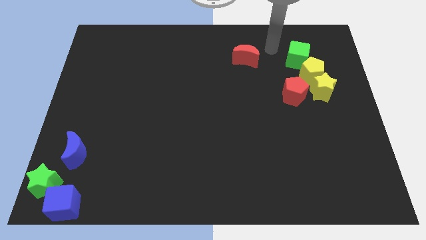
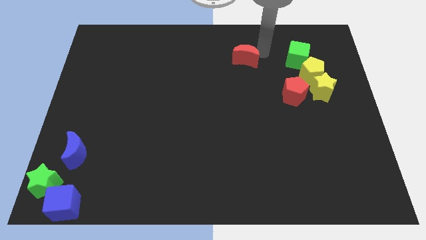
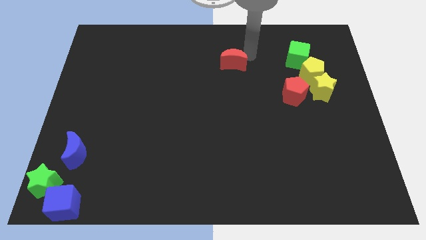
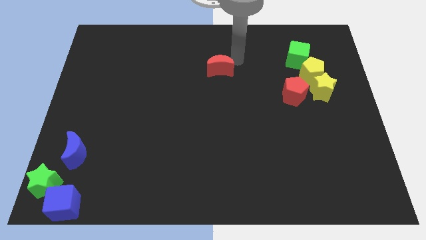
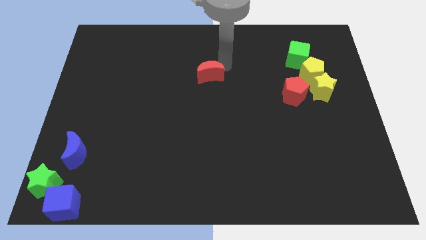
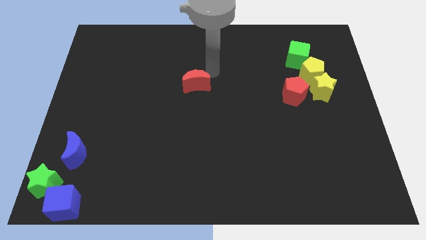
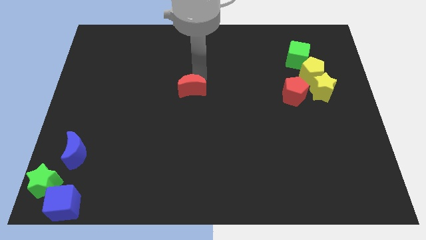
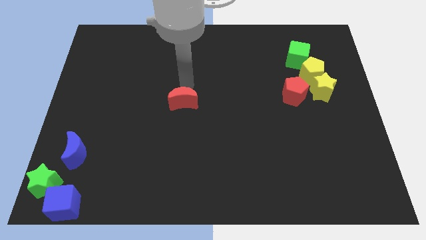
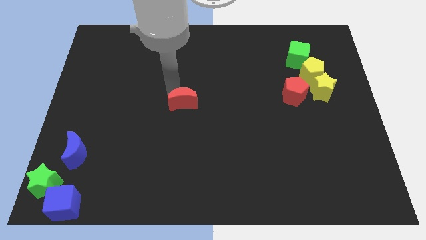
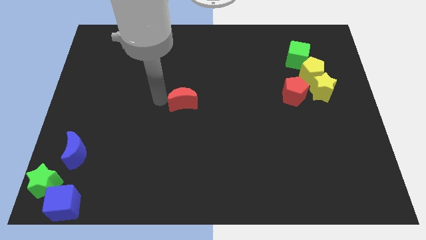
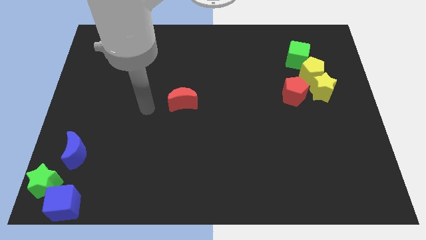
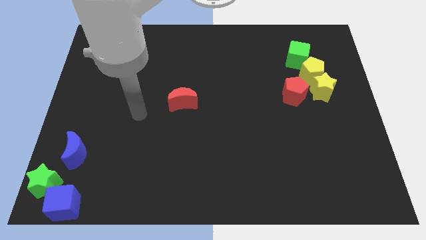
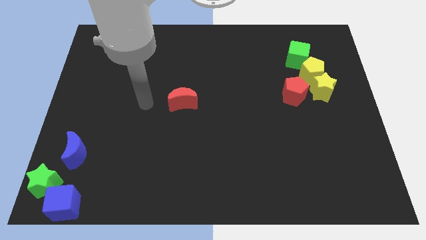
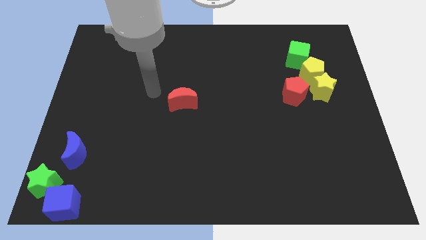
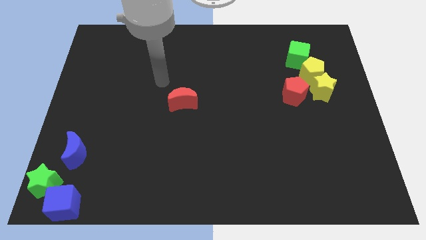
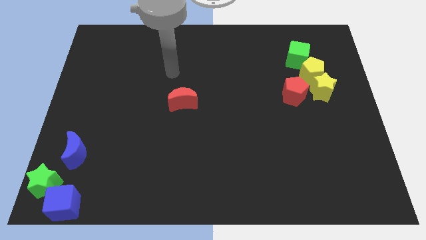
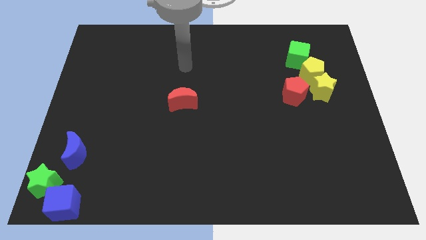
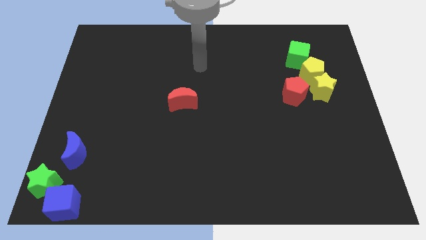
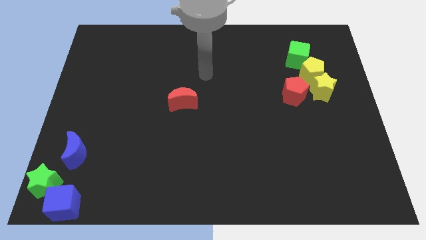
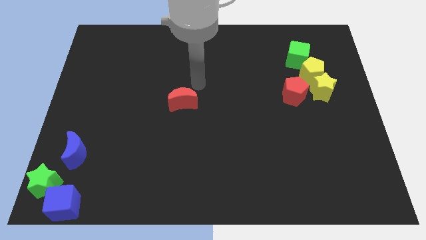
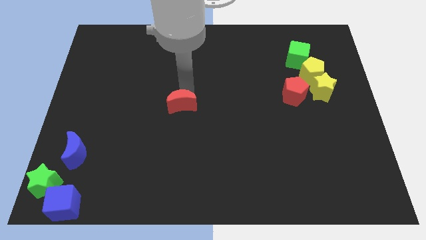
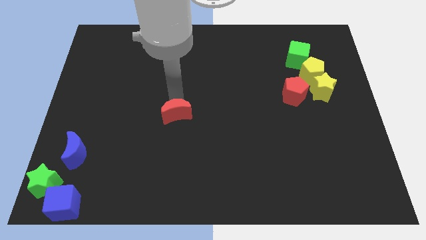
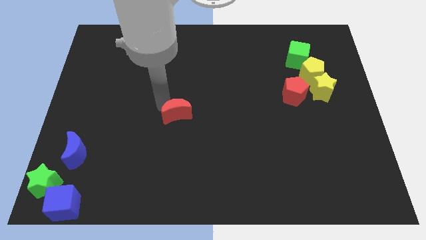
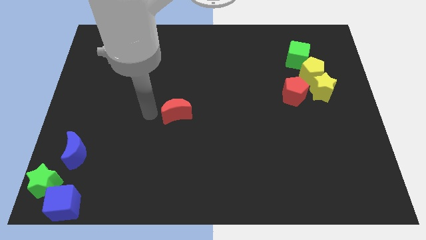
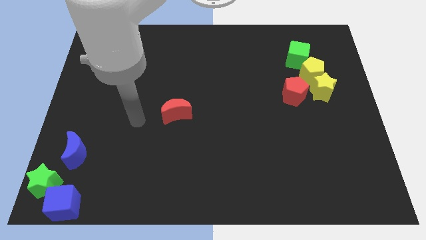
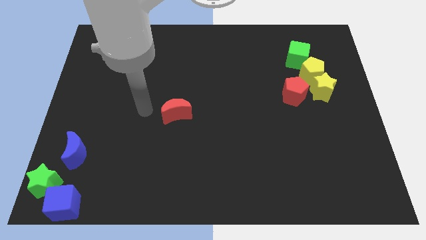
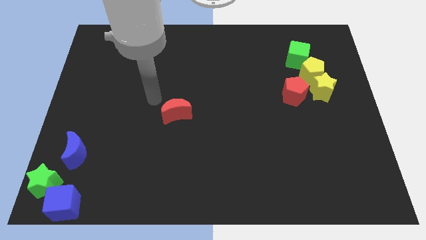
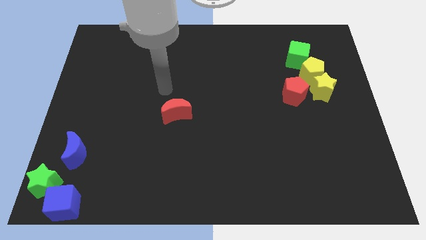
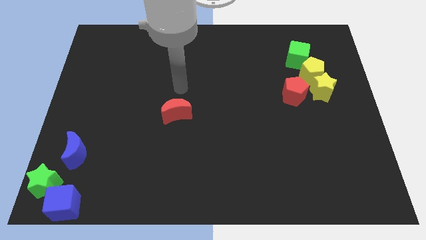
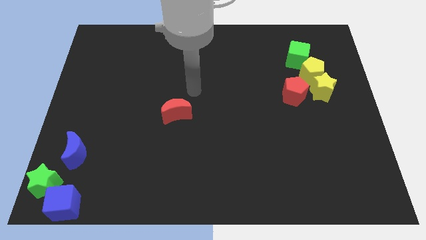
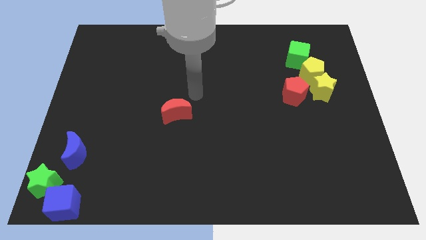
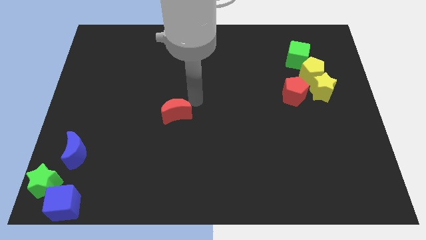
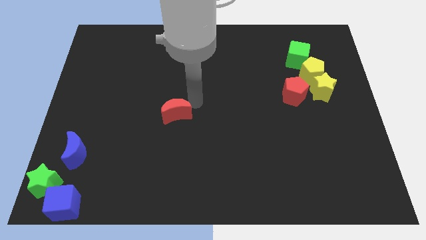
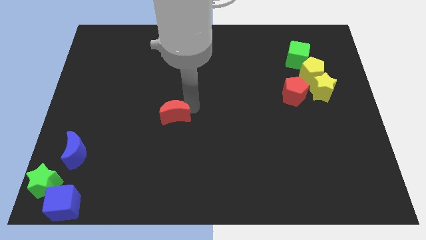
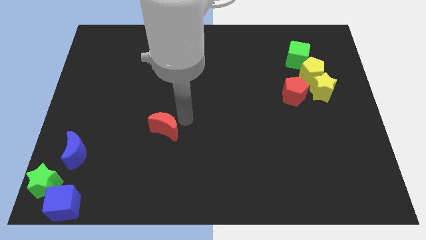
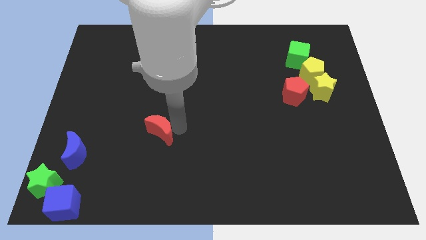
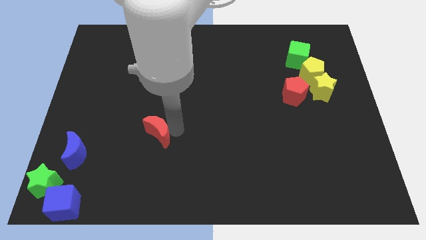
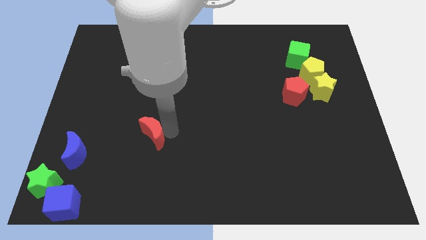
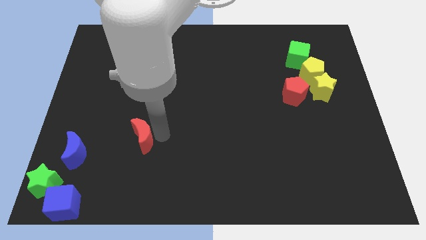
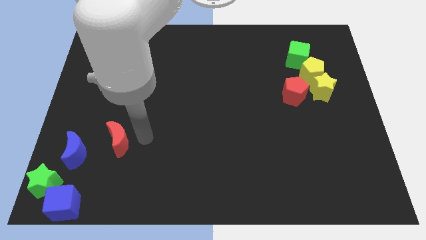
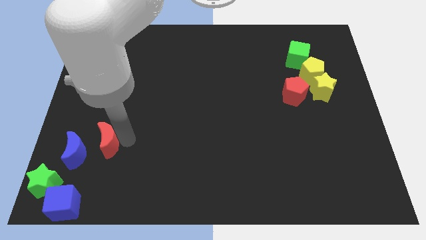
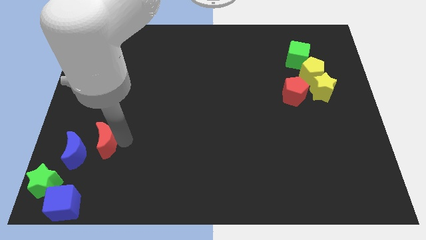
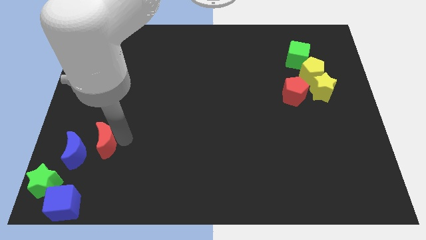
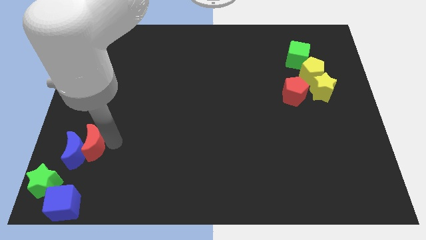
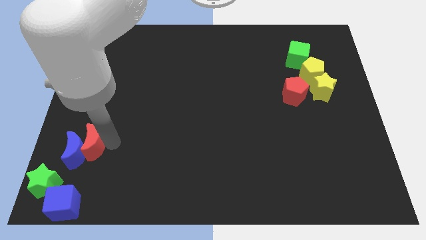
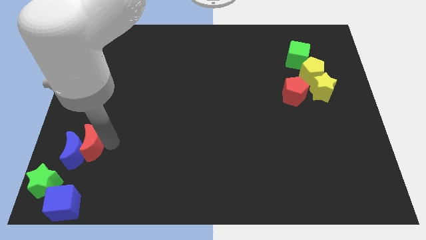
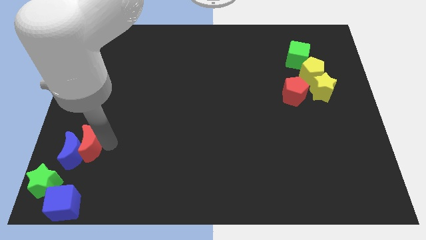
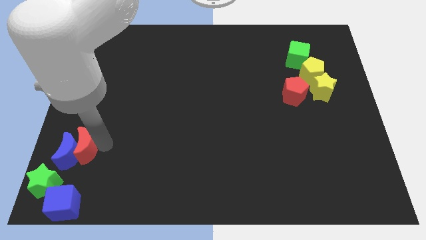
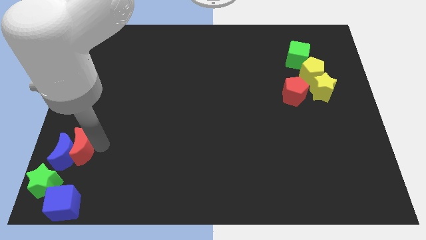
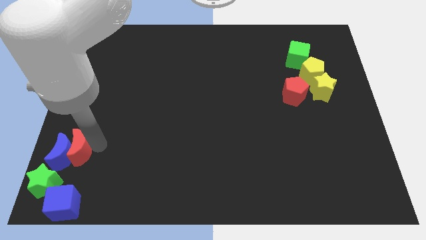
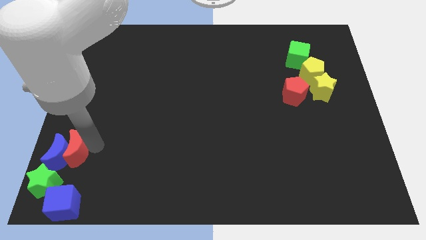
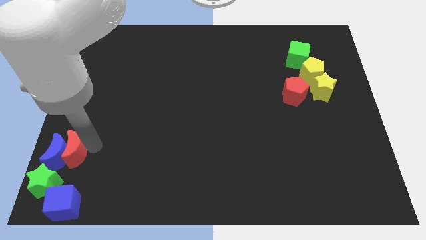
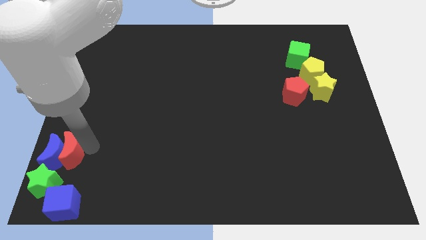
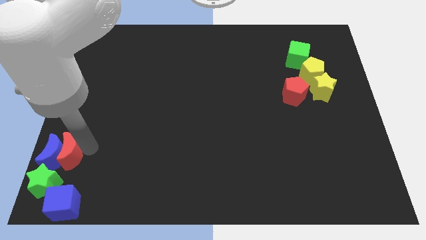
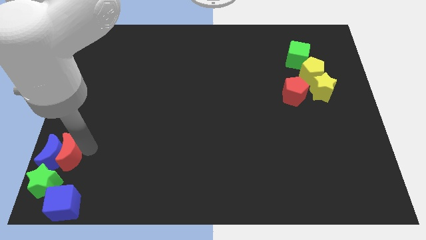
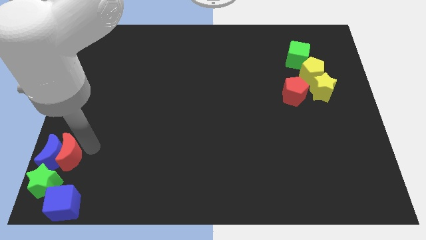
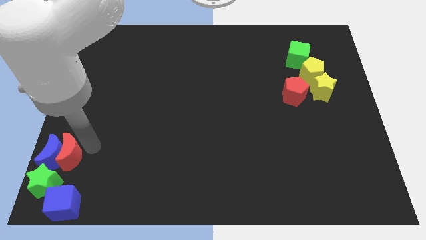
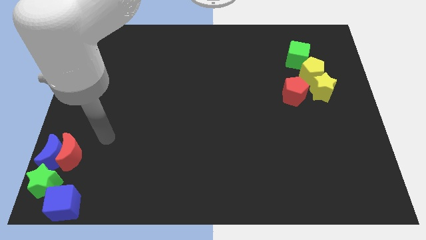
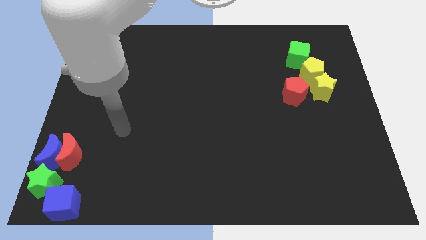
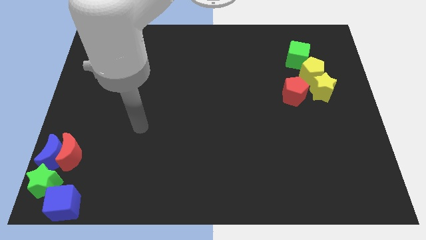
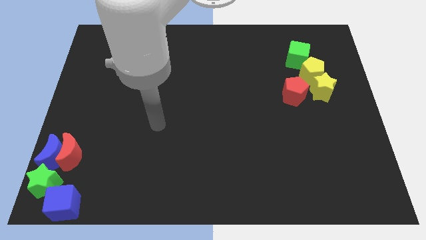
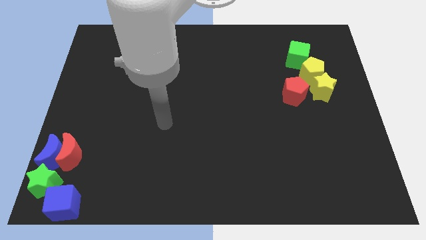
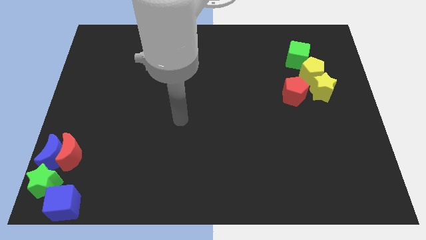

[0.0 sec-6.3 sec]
place the red crescent above the blue crescent

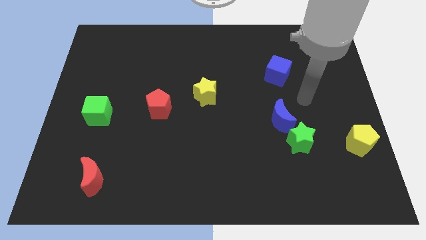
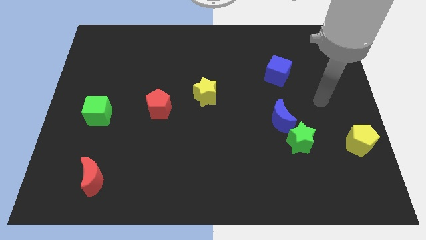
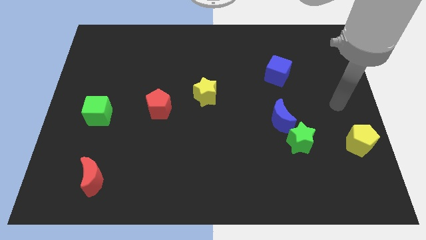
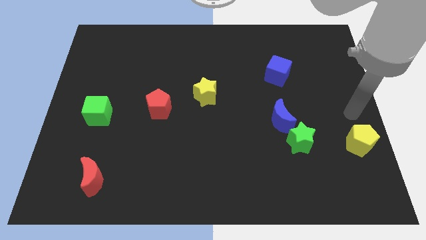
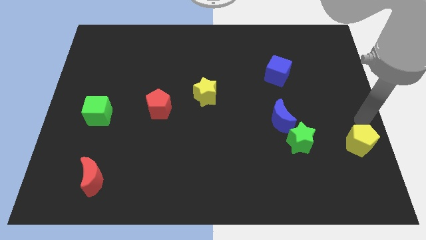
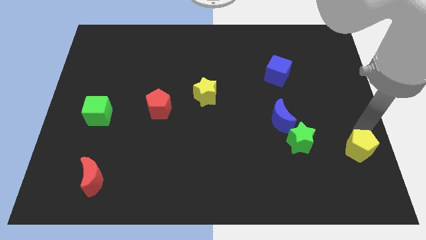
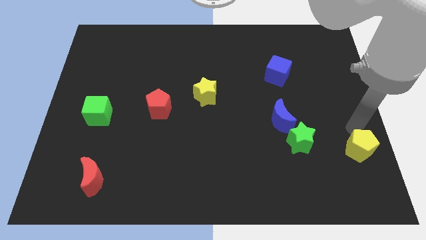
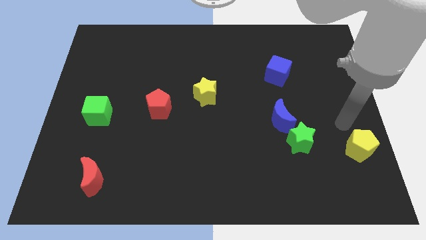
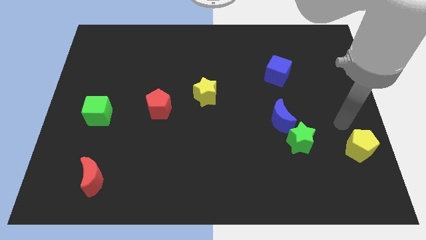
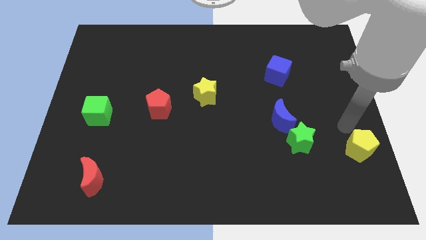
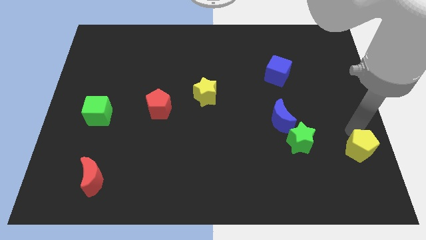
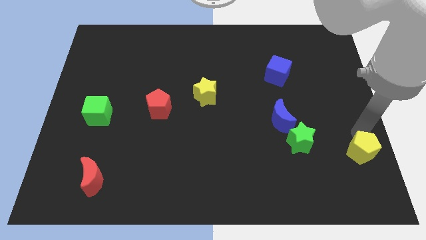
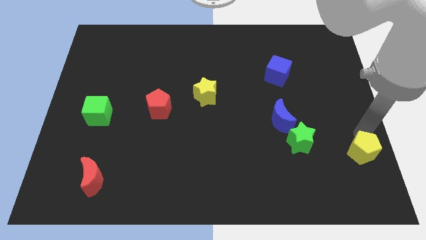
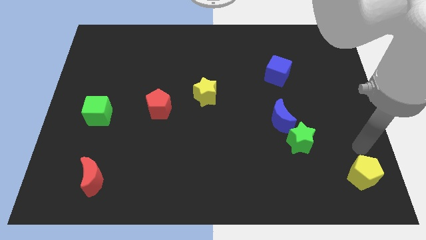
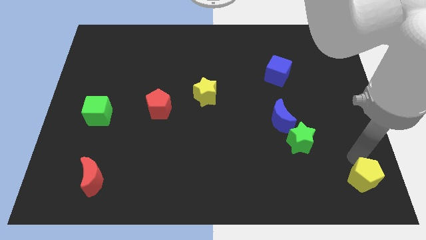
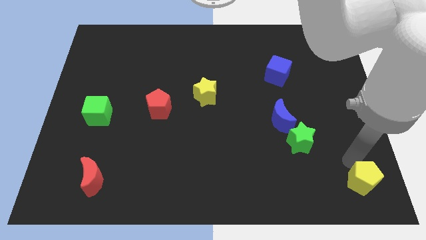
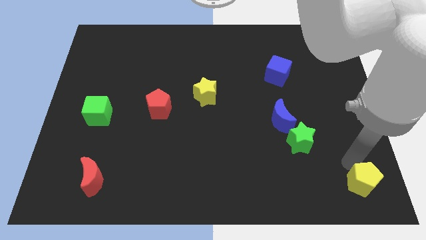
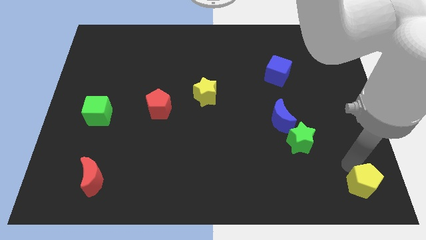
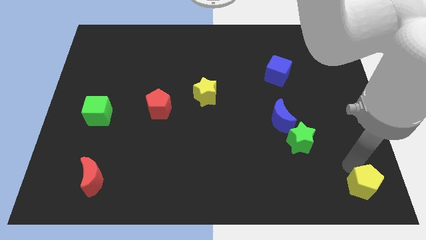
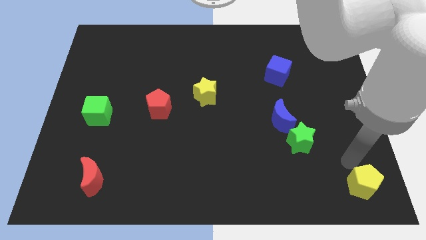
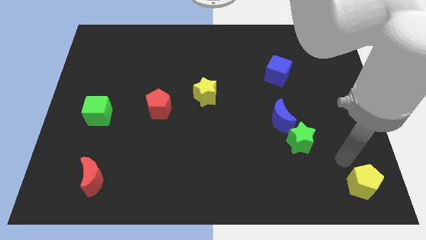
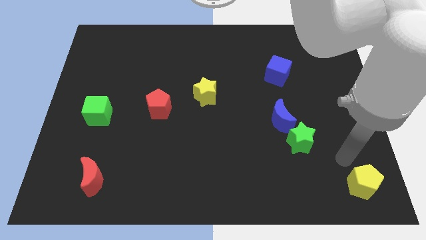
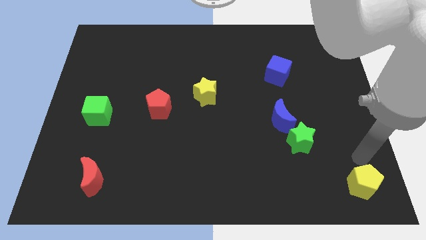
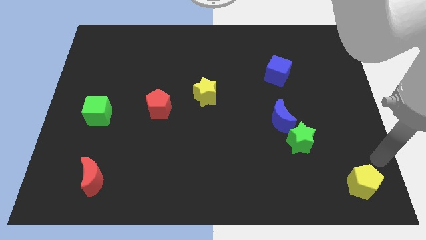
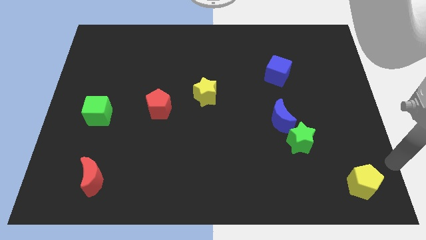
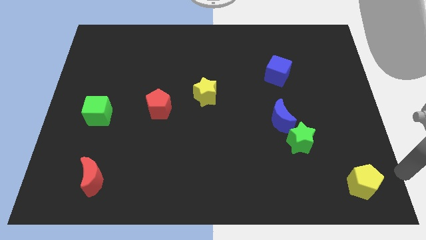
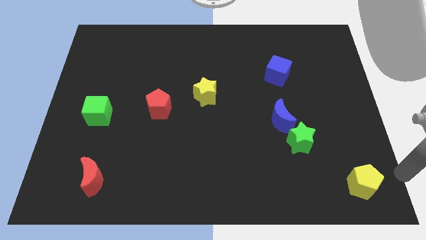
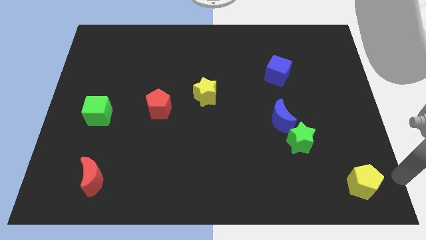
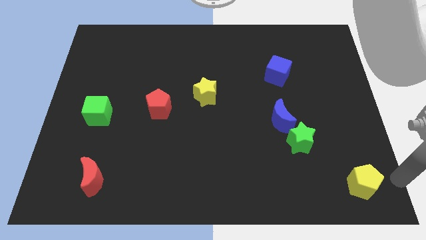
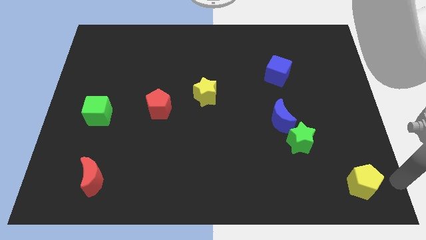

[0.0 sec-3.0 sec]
move the yellow pentagon downwards
